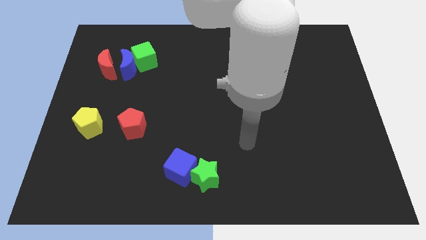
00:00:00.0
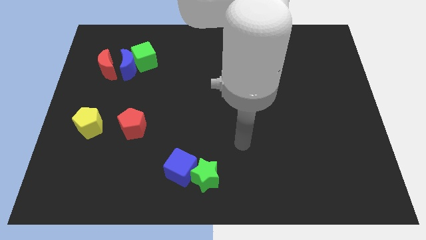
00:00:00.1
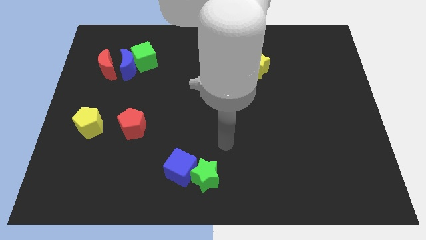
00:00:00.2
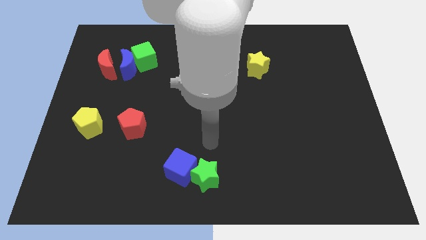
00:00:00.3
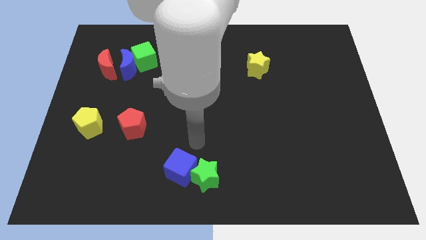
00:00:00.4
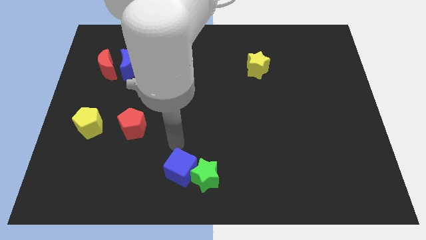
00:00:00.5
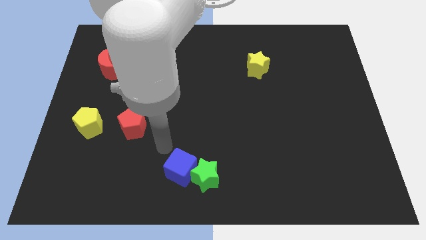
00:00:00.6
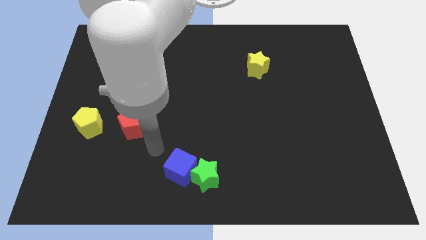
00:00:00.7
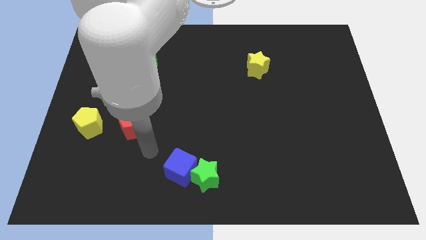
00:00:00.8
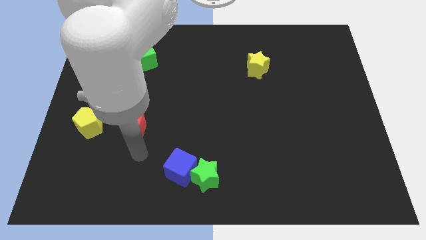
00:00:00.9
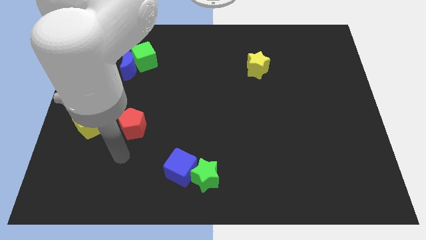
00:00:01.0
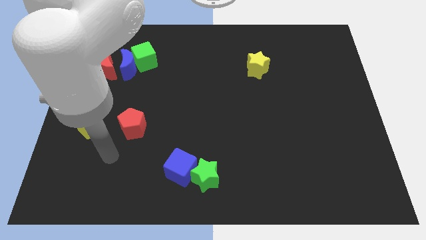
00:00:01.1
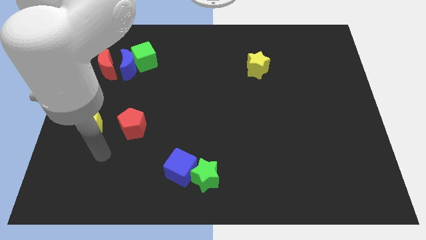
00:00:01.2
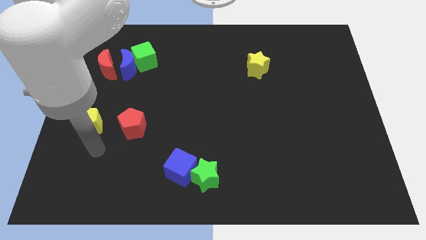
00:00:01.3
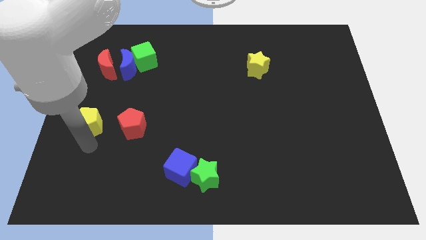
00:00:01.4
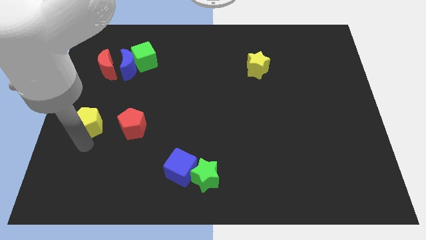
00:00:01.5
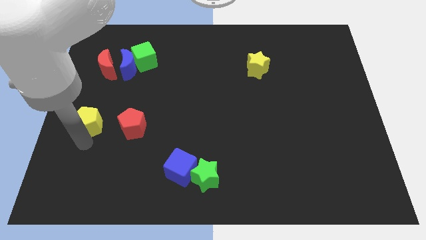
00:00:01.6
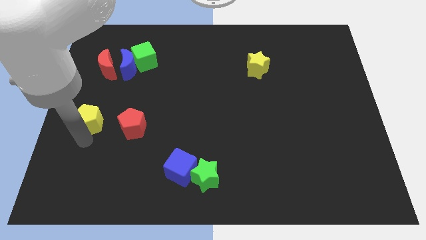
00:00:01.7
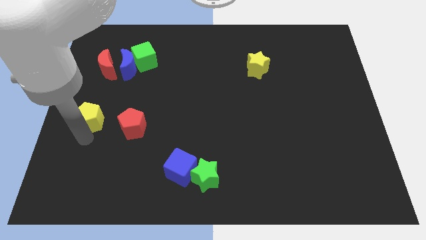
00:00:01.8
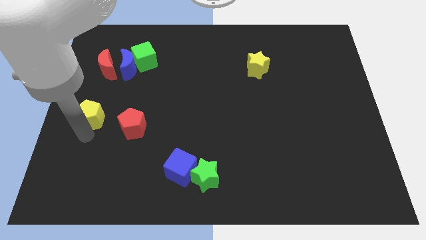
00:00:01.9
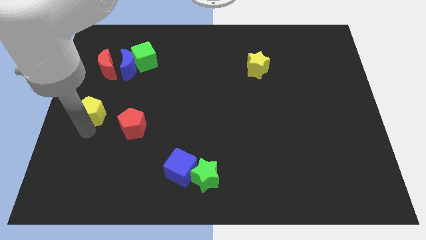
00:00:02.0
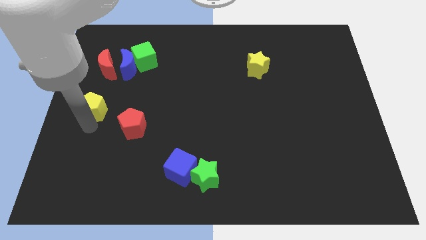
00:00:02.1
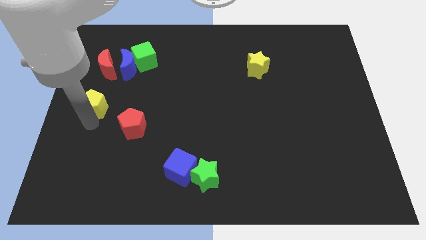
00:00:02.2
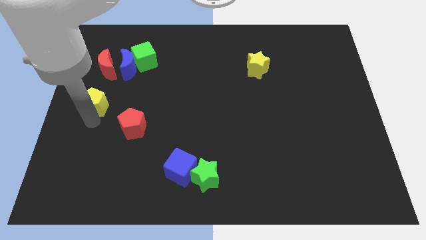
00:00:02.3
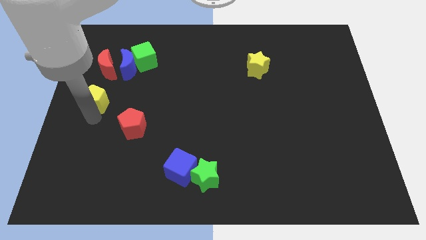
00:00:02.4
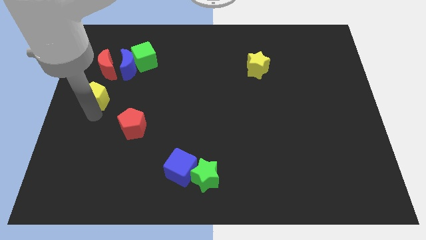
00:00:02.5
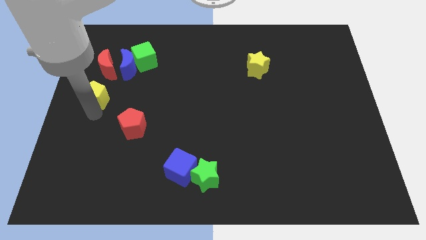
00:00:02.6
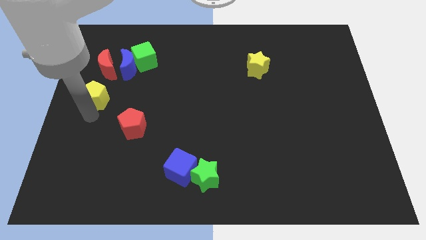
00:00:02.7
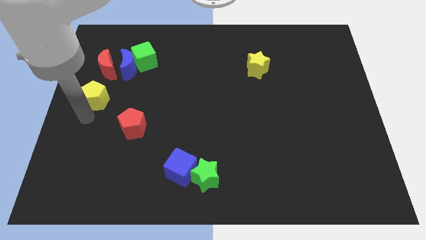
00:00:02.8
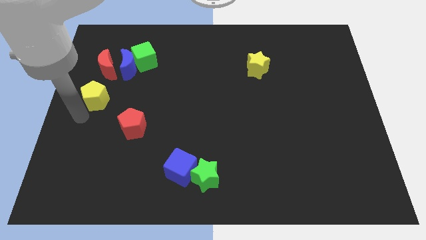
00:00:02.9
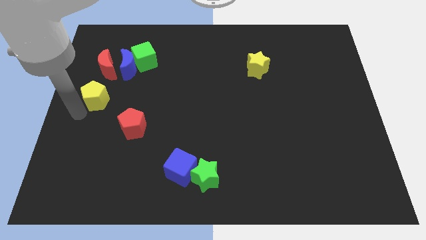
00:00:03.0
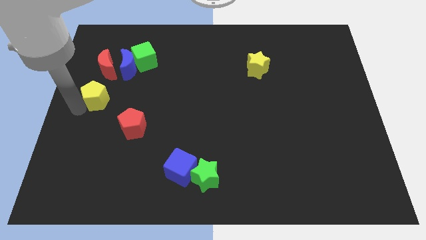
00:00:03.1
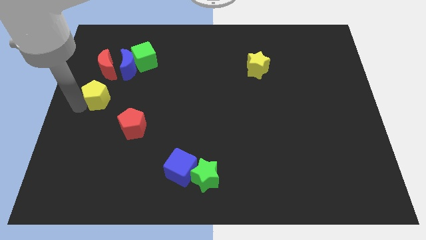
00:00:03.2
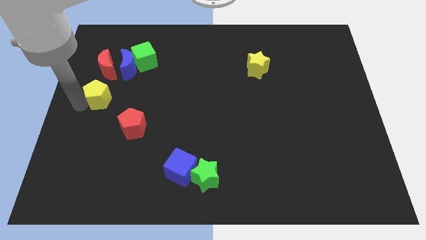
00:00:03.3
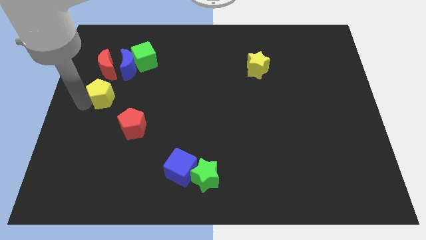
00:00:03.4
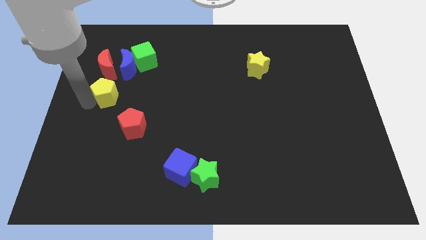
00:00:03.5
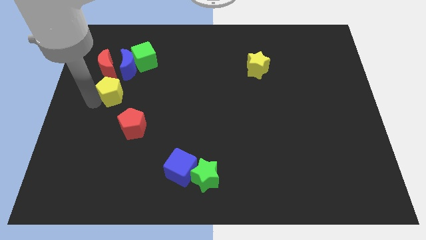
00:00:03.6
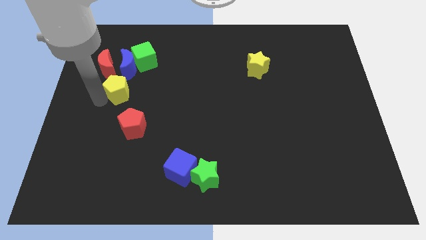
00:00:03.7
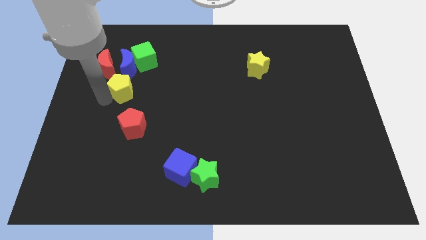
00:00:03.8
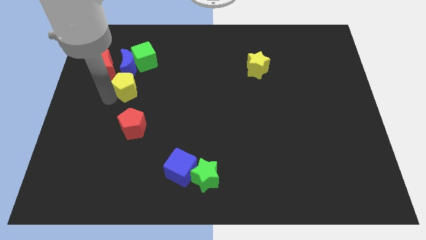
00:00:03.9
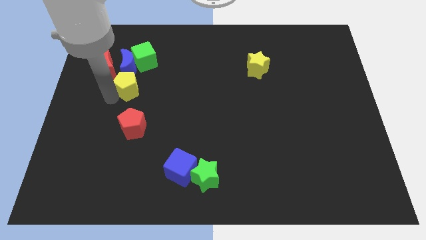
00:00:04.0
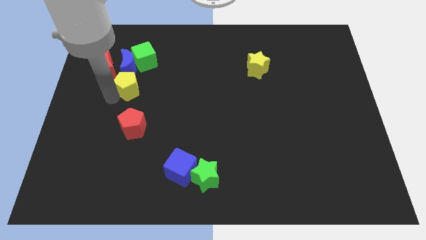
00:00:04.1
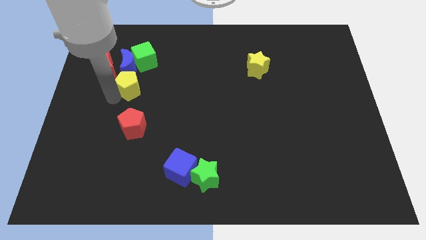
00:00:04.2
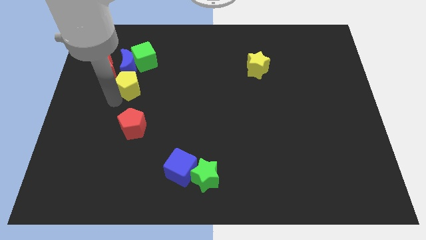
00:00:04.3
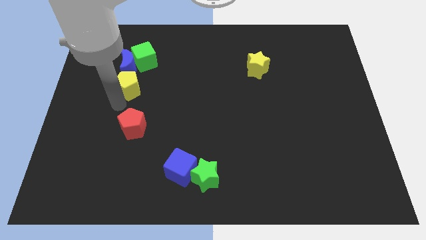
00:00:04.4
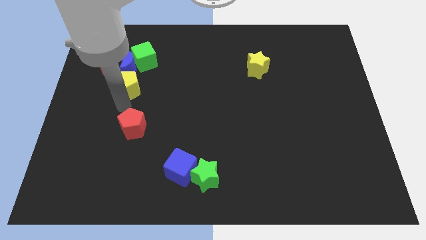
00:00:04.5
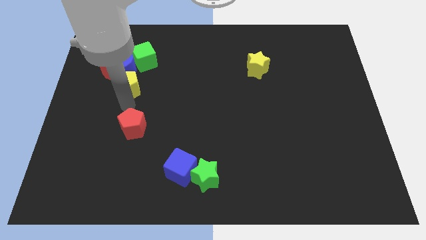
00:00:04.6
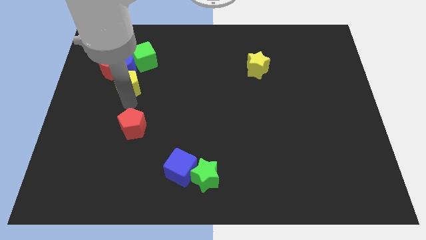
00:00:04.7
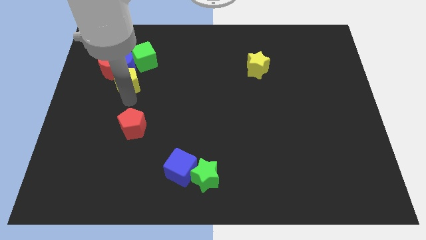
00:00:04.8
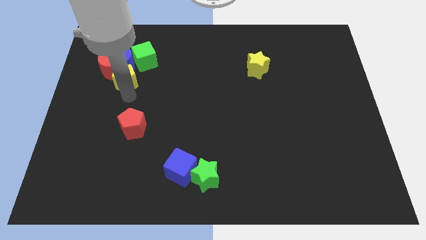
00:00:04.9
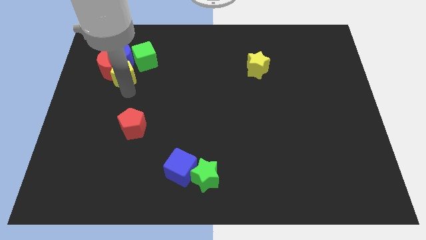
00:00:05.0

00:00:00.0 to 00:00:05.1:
slide the yellow pentagon next to the blue moon

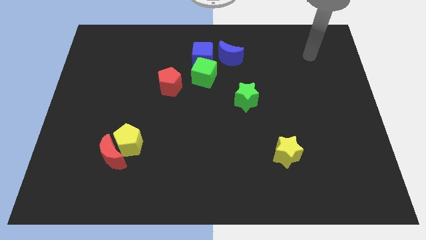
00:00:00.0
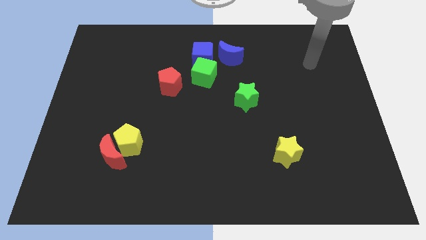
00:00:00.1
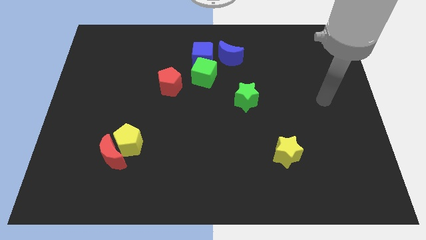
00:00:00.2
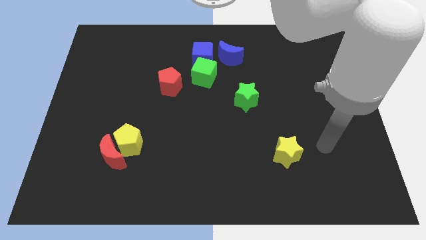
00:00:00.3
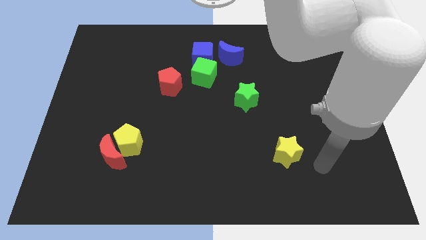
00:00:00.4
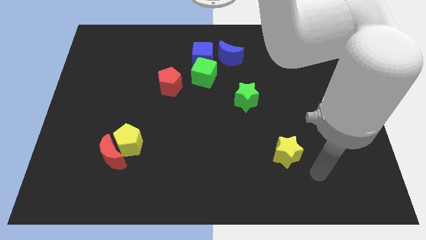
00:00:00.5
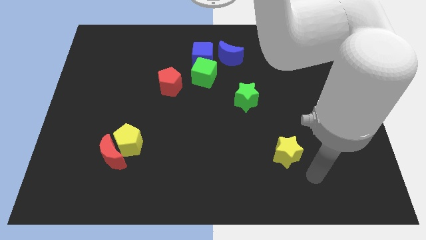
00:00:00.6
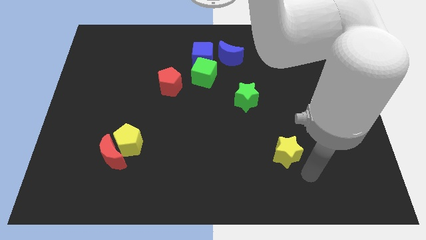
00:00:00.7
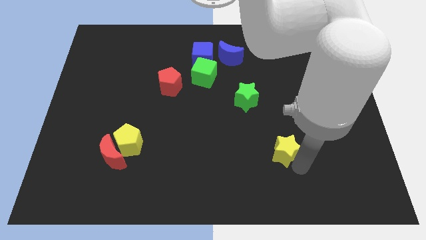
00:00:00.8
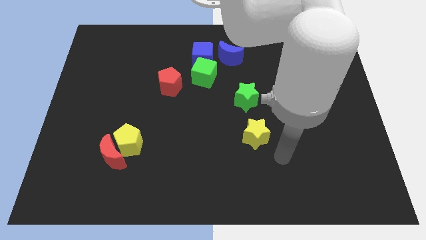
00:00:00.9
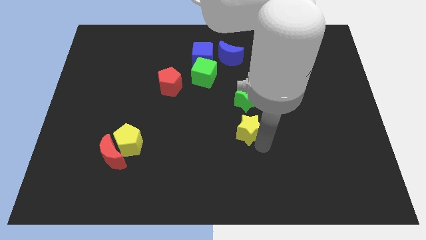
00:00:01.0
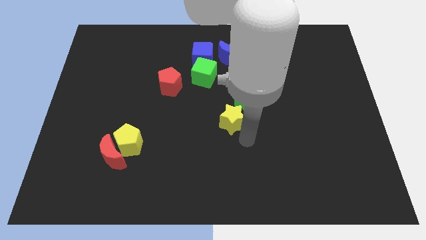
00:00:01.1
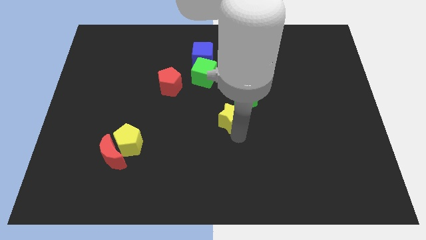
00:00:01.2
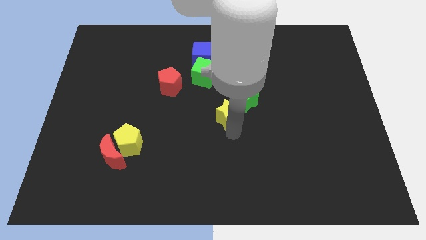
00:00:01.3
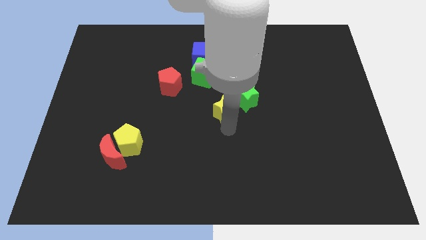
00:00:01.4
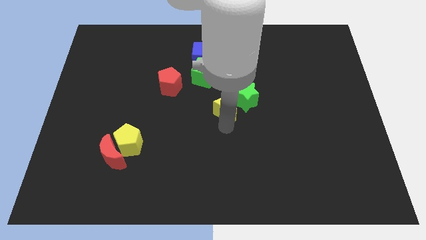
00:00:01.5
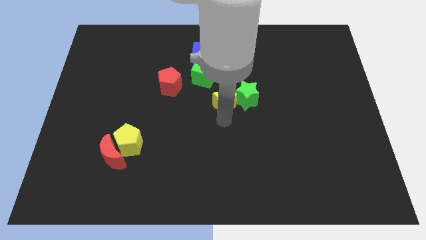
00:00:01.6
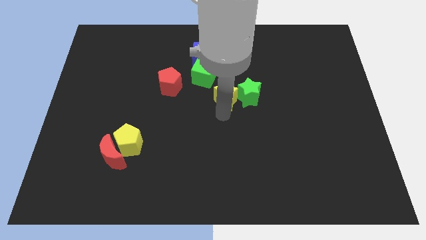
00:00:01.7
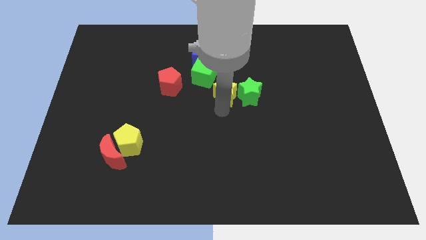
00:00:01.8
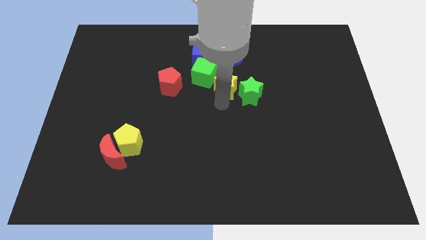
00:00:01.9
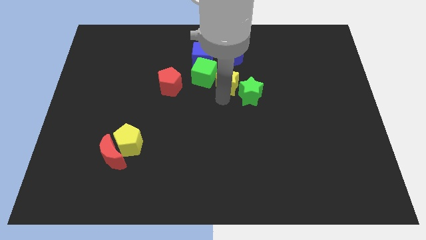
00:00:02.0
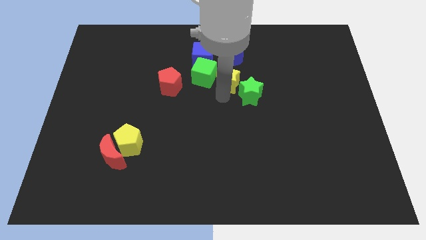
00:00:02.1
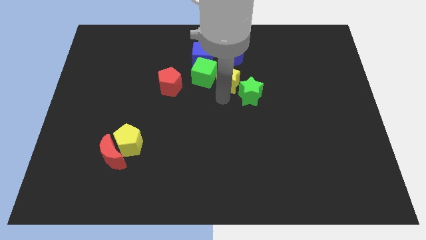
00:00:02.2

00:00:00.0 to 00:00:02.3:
put the yellow star to the green cube

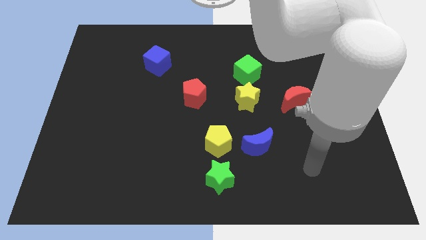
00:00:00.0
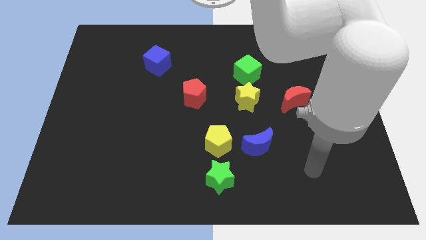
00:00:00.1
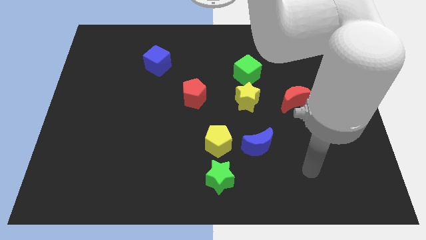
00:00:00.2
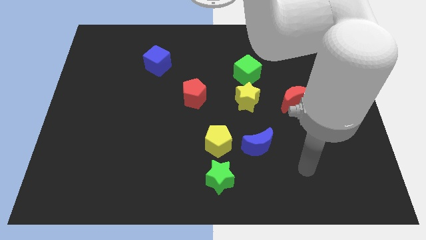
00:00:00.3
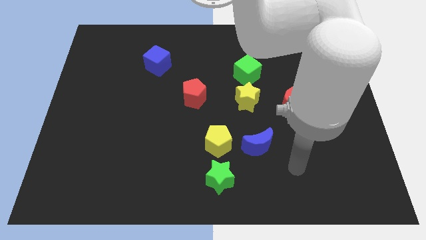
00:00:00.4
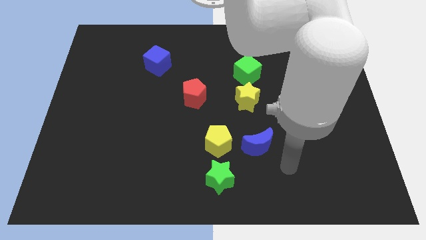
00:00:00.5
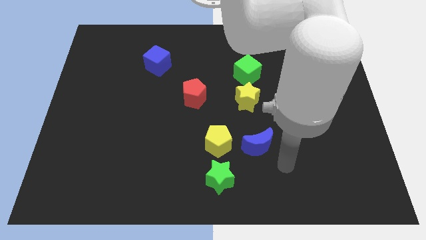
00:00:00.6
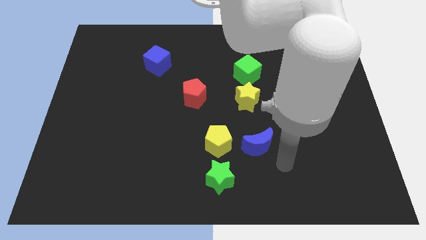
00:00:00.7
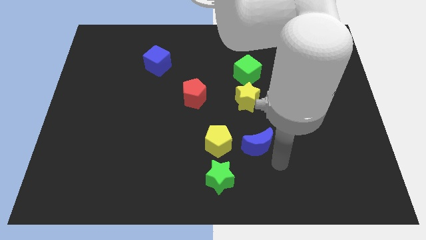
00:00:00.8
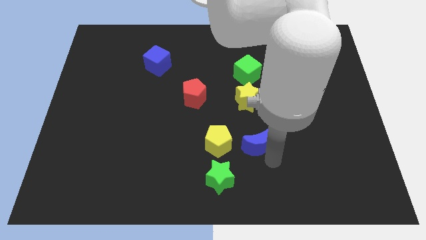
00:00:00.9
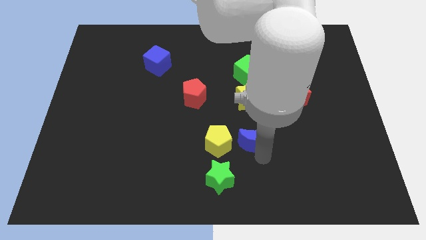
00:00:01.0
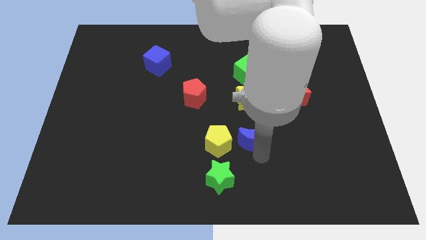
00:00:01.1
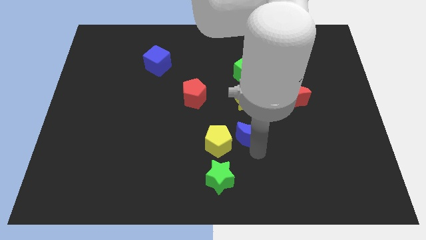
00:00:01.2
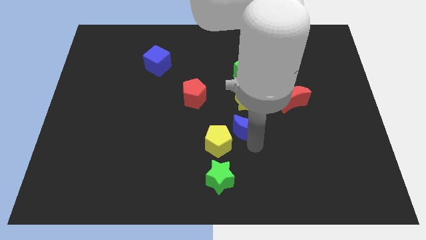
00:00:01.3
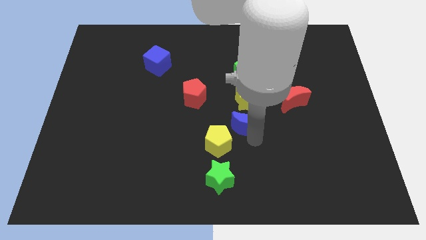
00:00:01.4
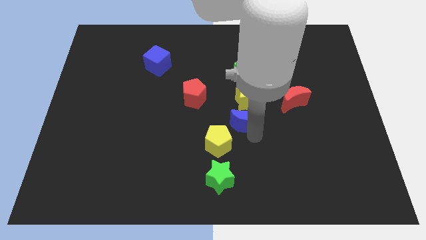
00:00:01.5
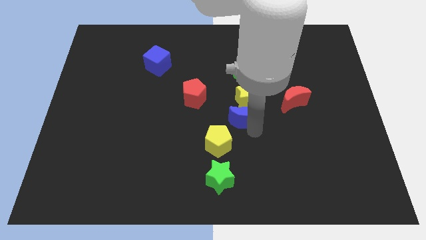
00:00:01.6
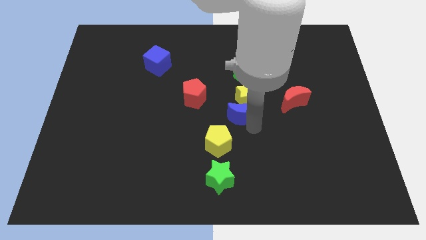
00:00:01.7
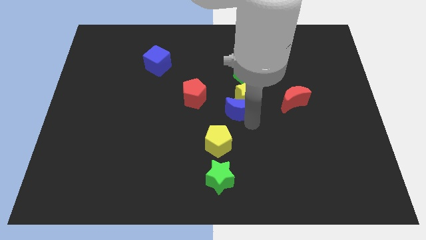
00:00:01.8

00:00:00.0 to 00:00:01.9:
slide the blue moon to the yellow star
